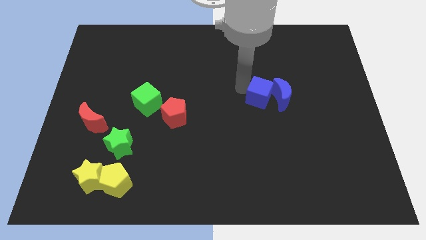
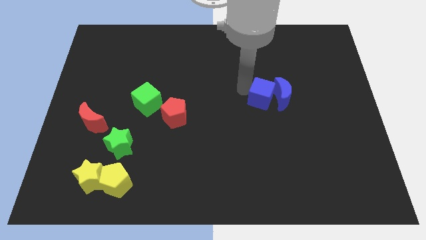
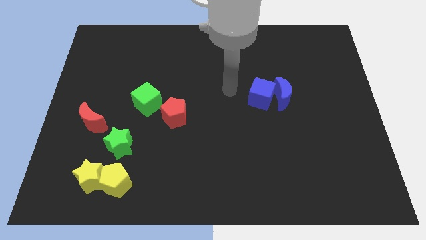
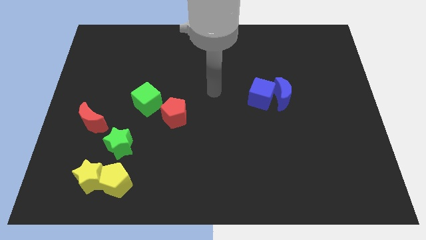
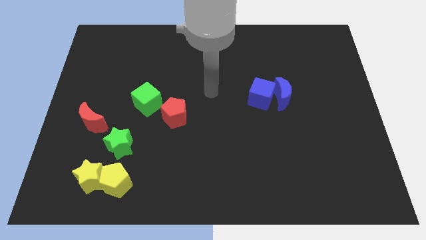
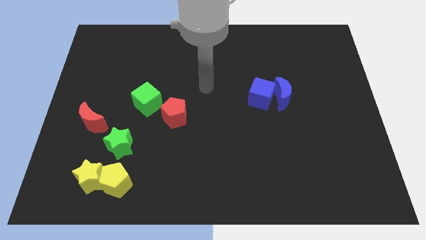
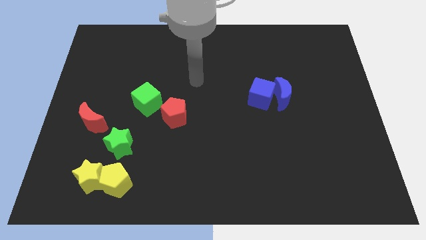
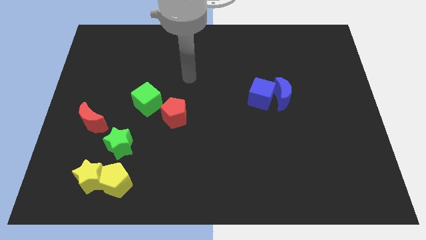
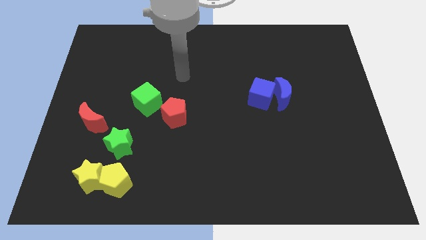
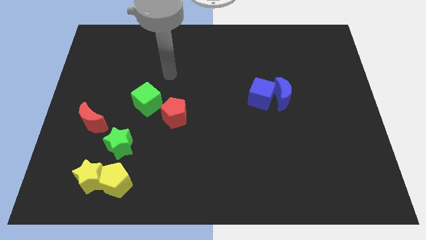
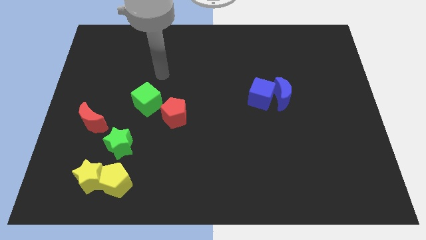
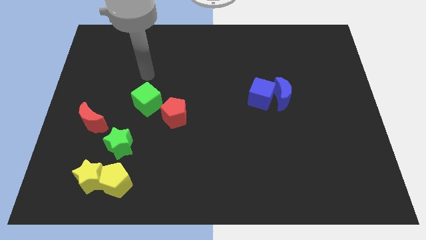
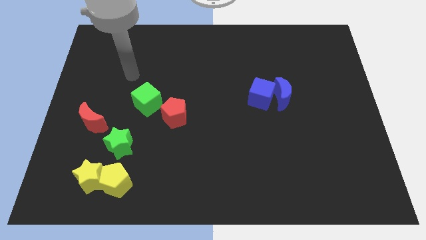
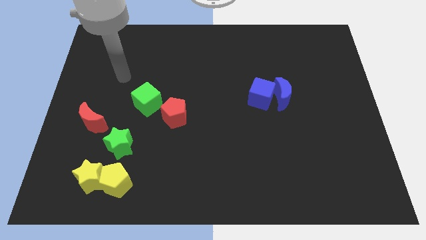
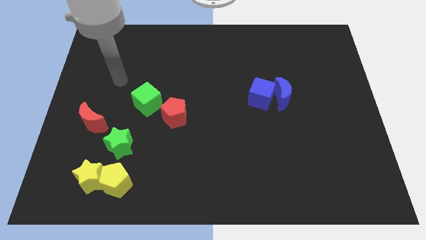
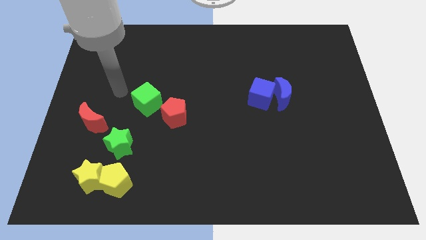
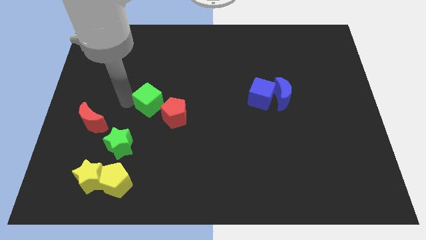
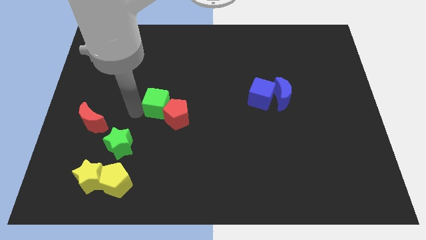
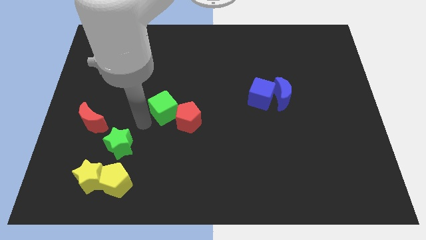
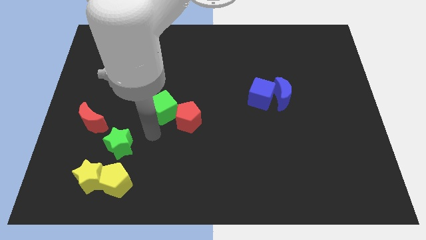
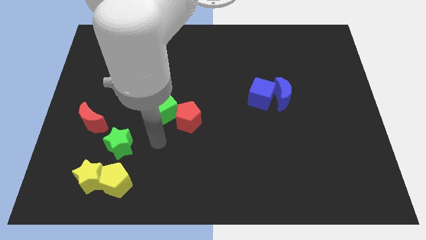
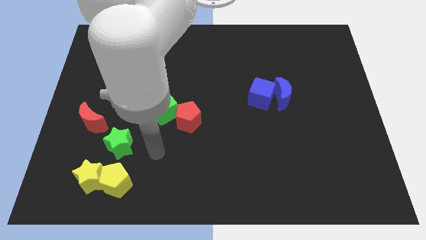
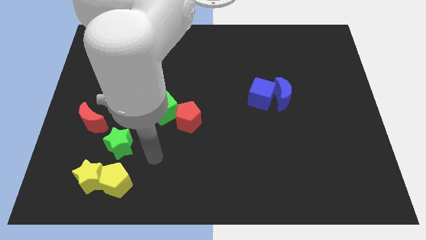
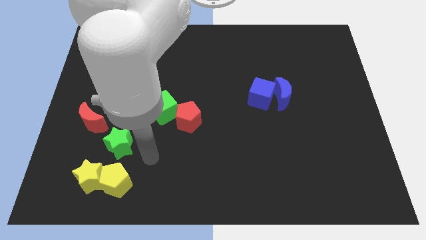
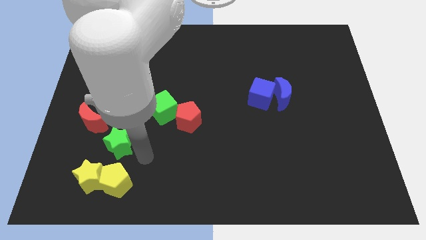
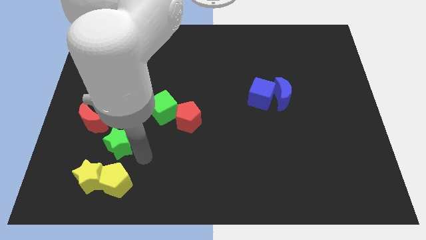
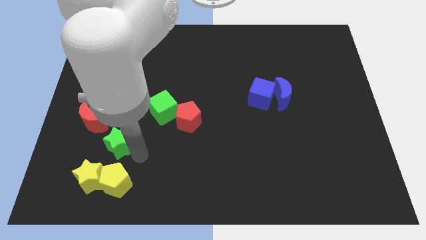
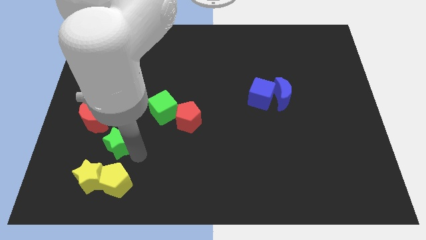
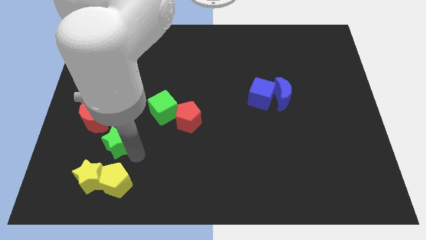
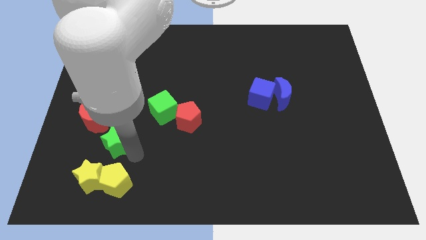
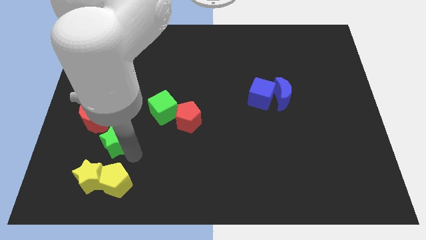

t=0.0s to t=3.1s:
push the green cube into the red pentagon

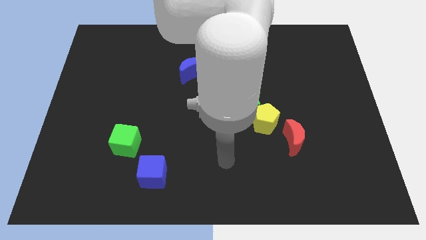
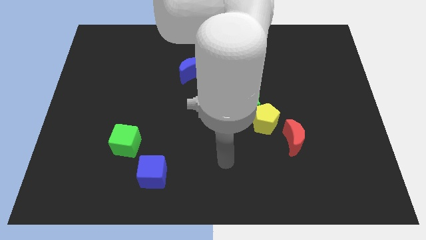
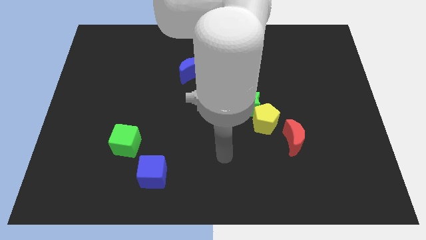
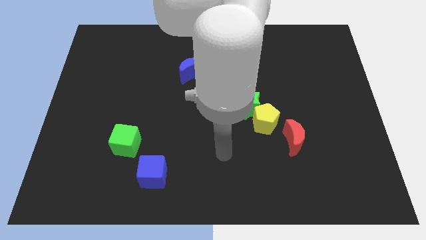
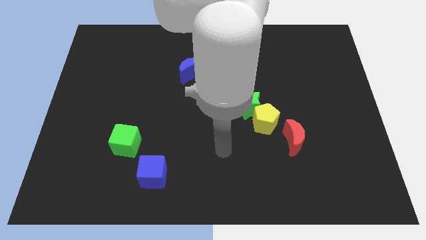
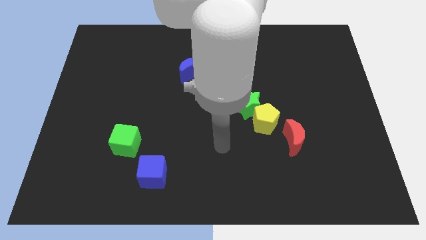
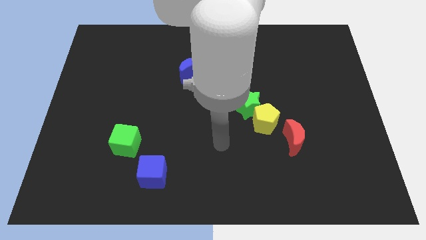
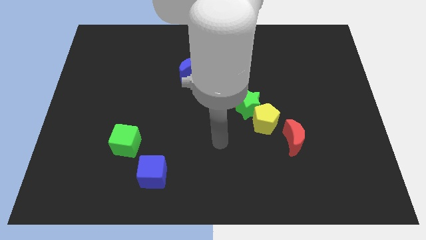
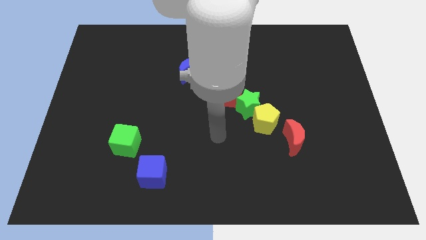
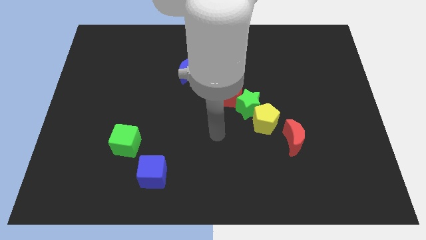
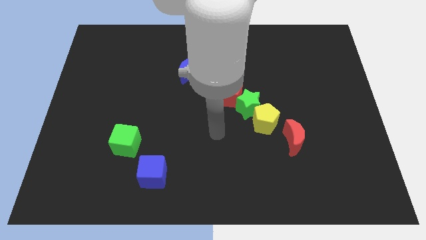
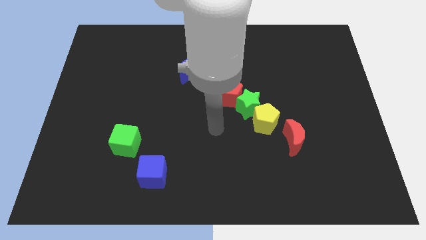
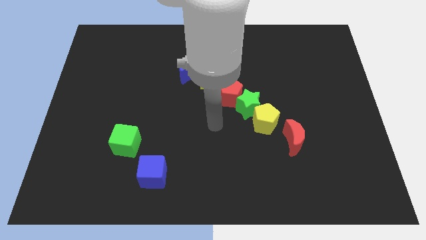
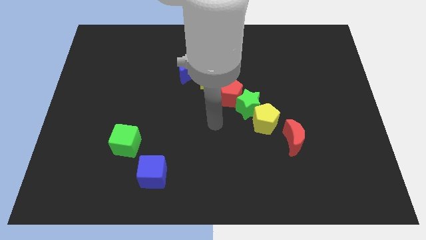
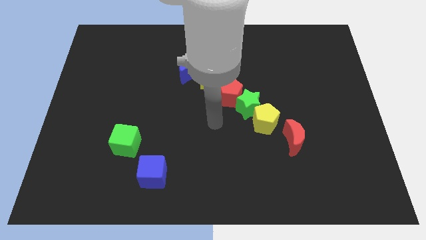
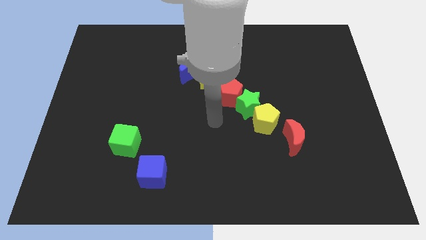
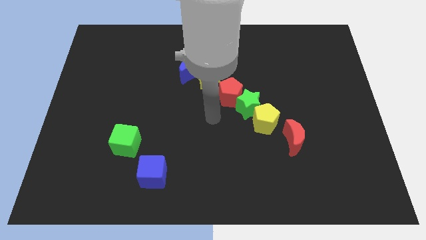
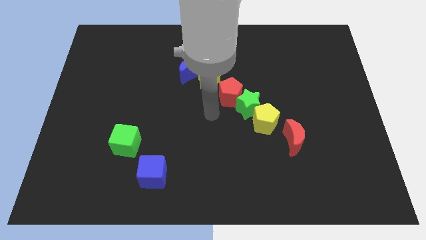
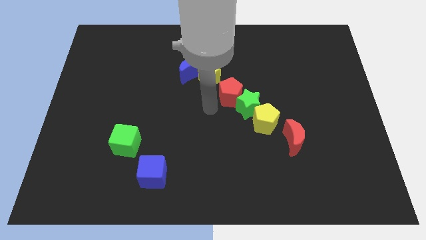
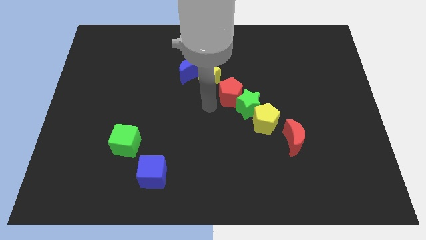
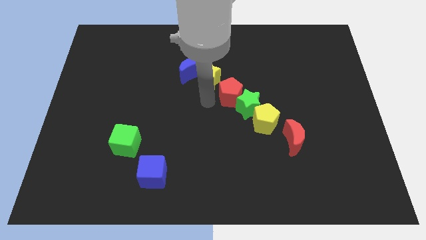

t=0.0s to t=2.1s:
point your arm at the left of the red pentagon

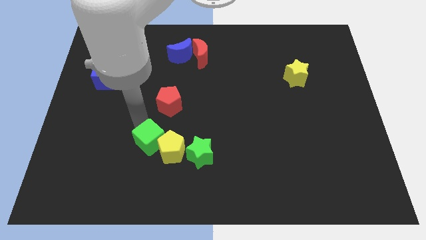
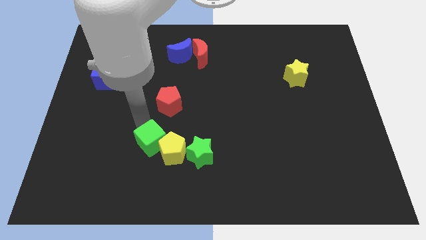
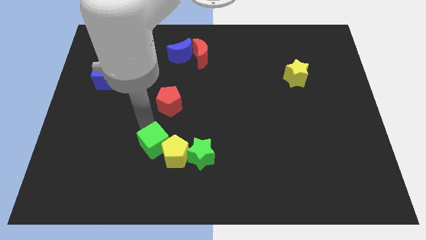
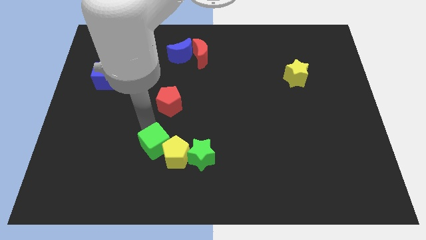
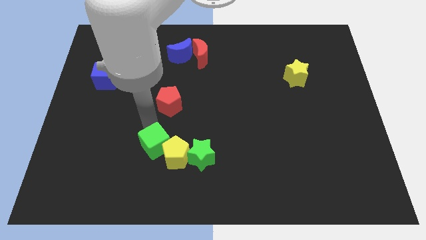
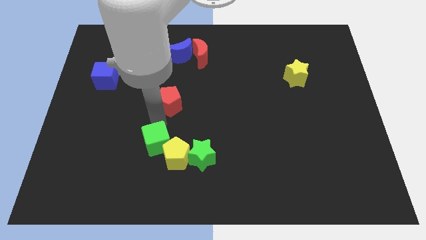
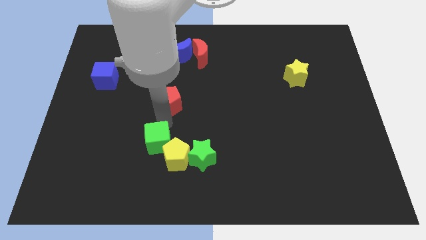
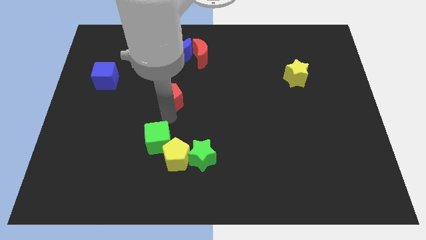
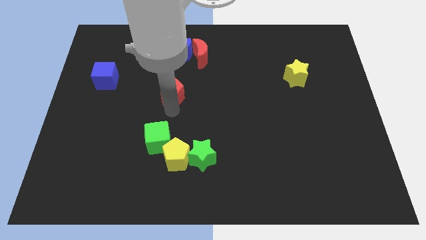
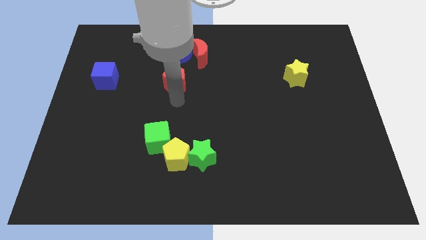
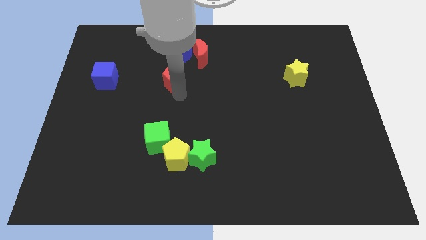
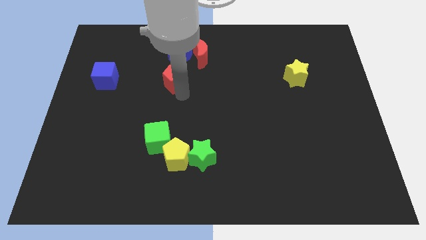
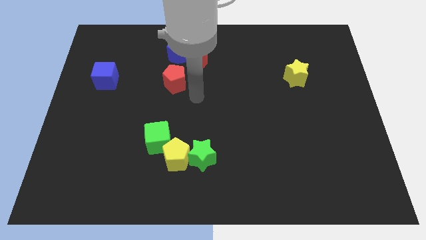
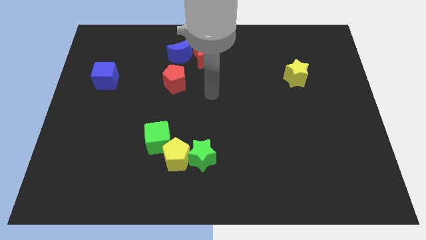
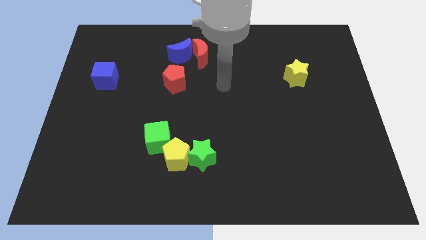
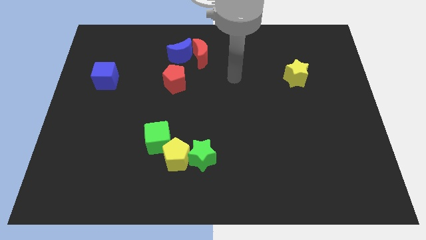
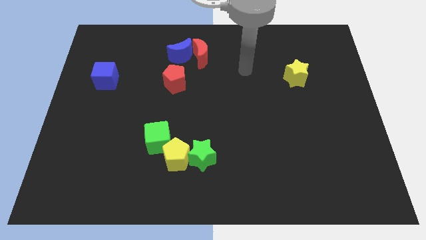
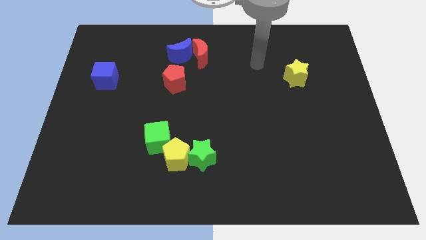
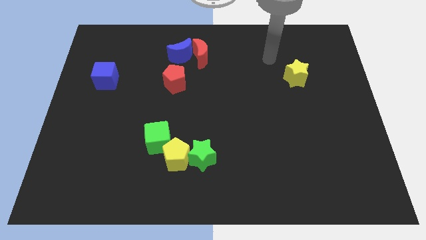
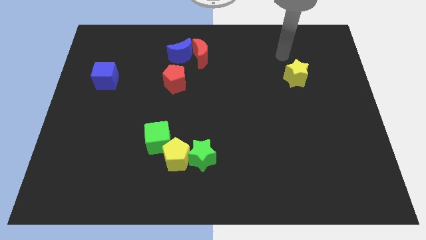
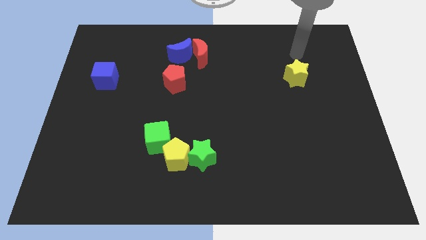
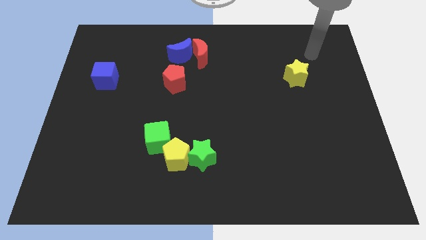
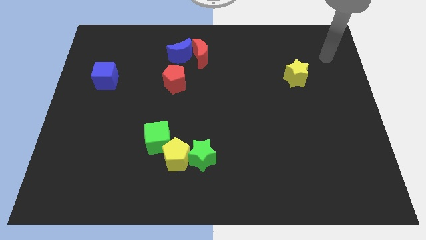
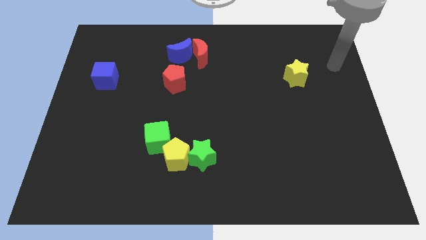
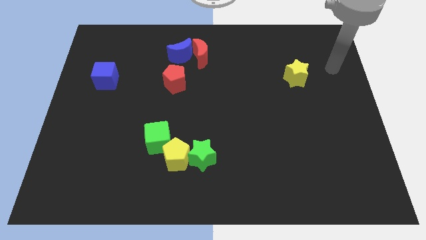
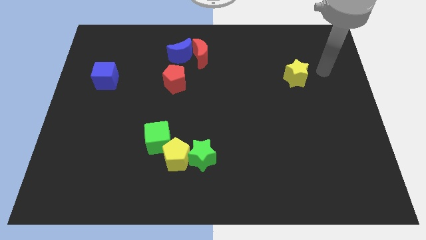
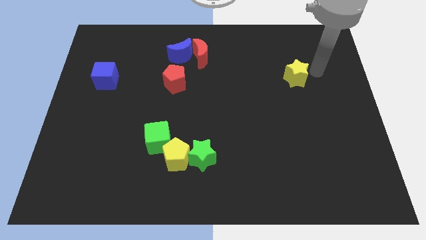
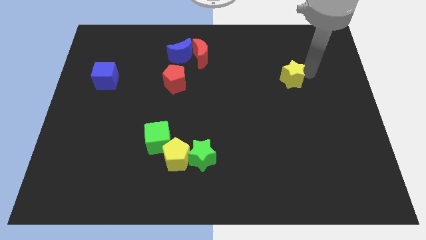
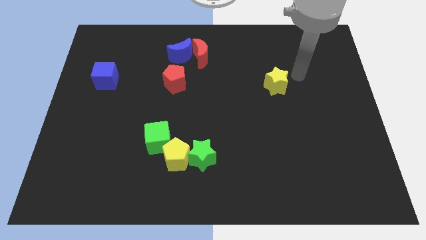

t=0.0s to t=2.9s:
move the red pentagon parallel right to the blue cube

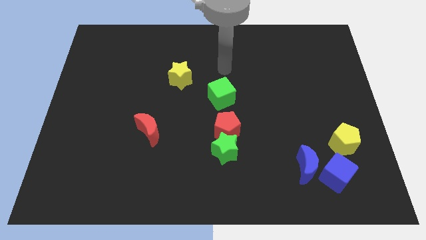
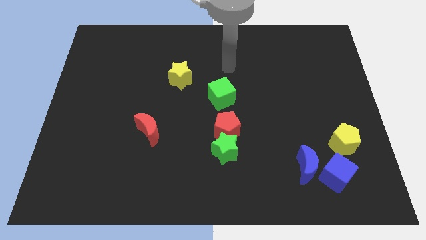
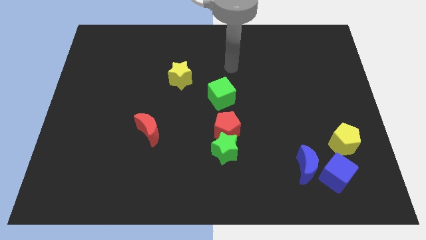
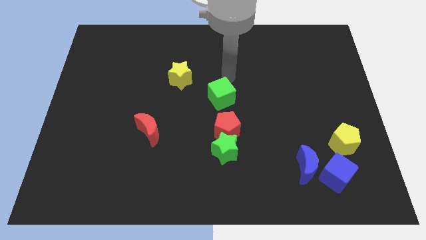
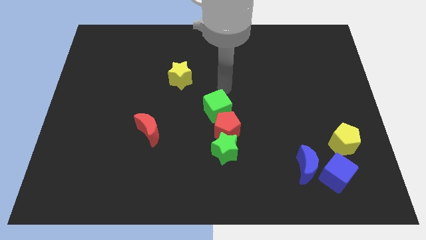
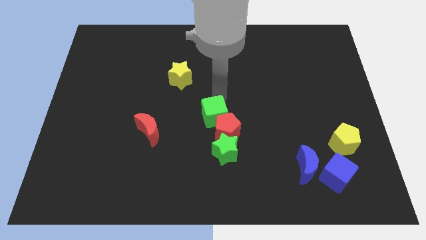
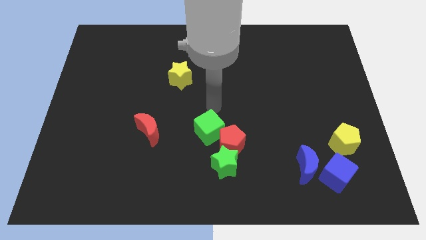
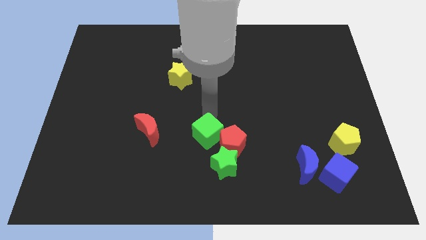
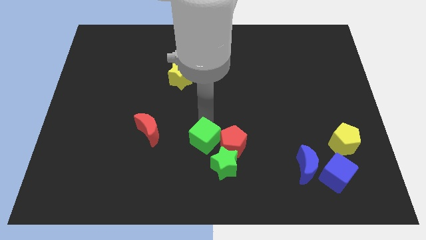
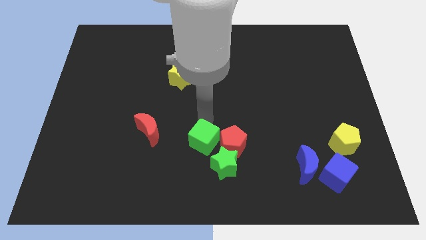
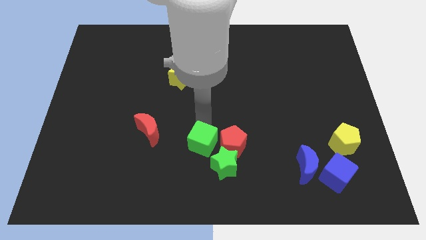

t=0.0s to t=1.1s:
move the green cube to the left of the red pentagon
